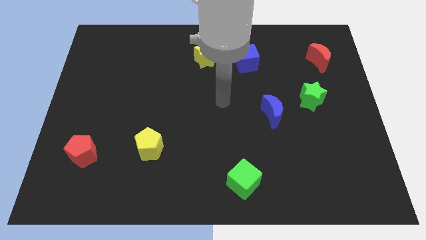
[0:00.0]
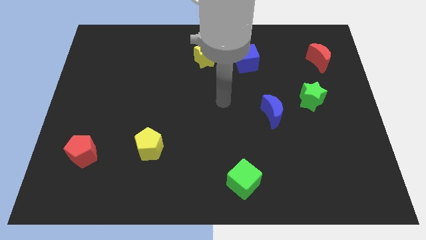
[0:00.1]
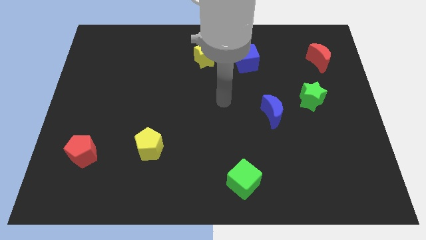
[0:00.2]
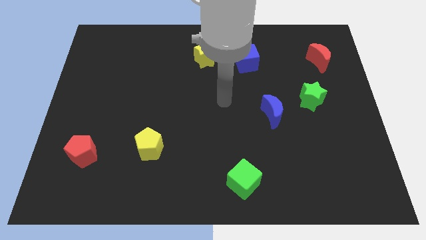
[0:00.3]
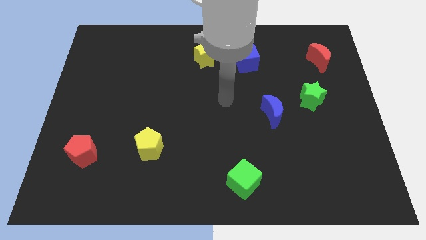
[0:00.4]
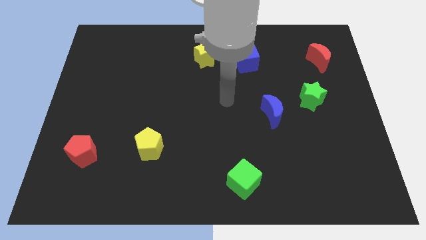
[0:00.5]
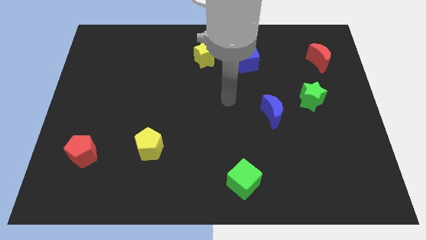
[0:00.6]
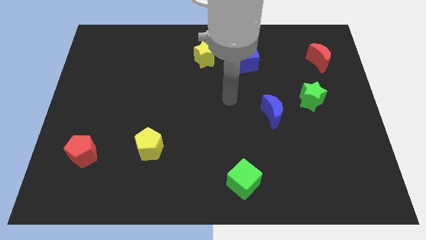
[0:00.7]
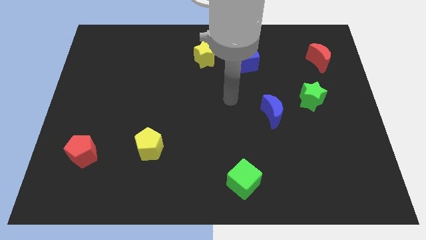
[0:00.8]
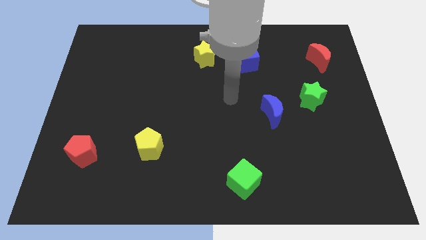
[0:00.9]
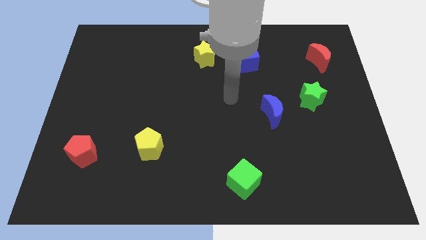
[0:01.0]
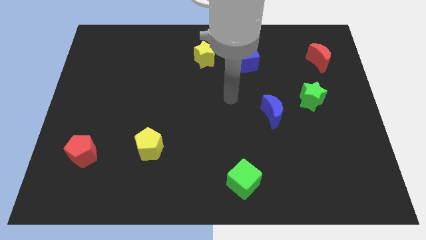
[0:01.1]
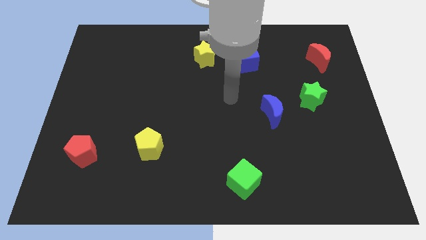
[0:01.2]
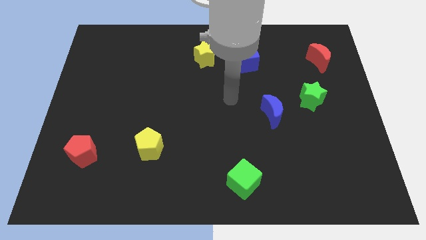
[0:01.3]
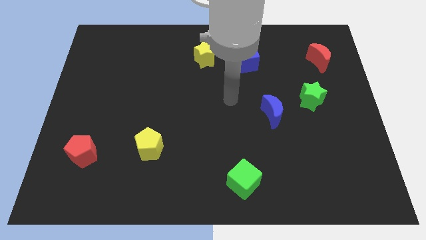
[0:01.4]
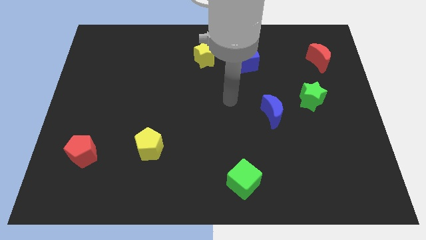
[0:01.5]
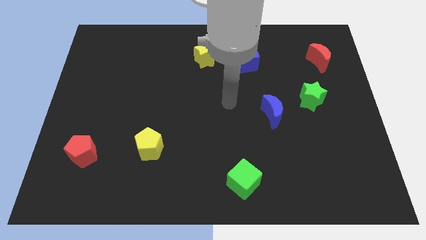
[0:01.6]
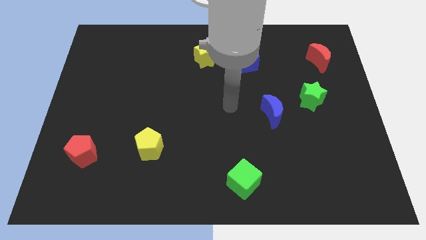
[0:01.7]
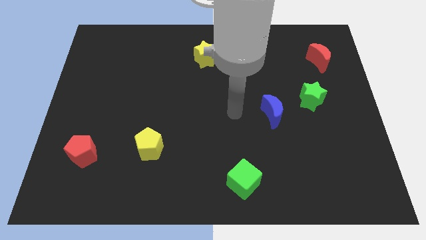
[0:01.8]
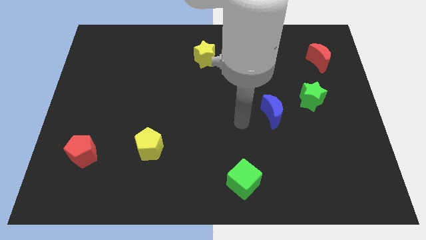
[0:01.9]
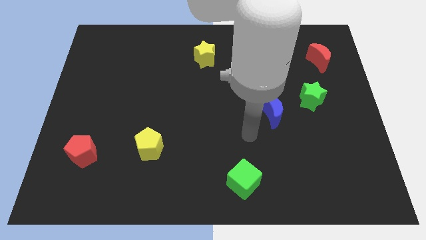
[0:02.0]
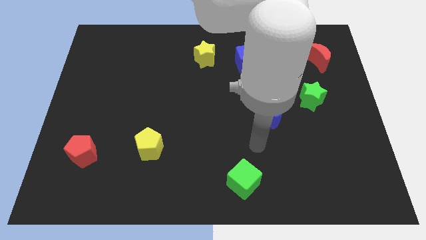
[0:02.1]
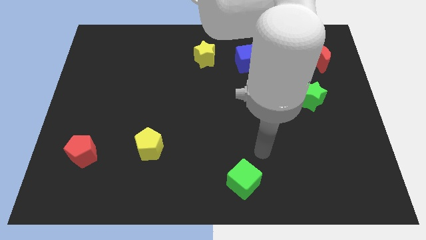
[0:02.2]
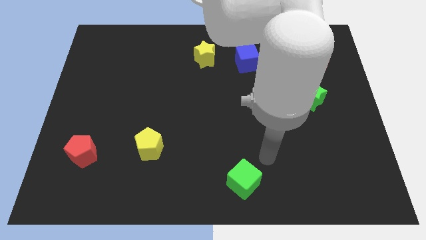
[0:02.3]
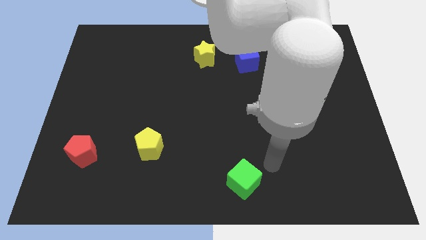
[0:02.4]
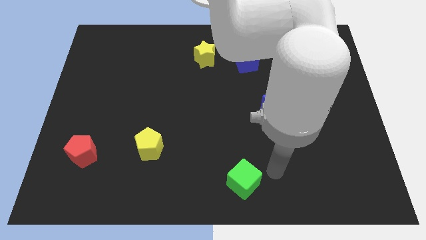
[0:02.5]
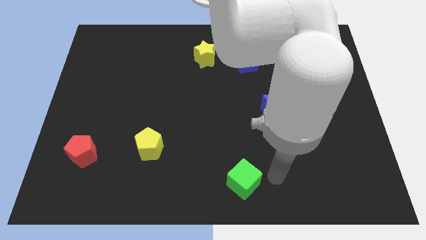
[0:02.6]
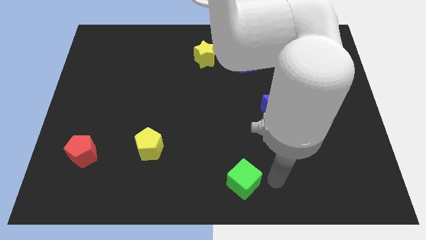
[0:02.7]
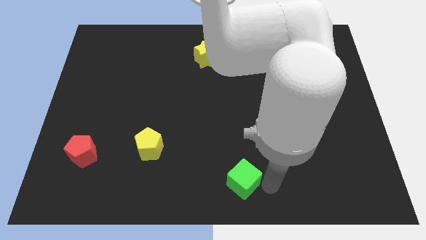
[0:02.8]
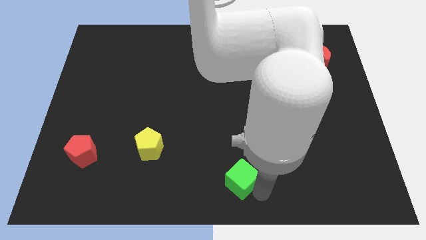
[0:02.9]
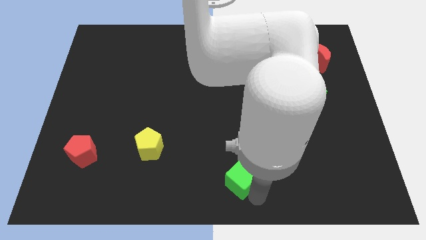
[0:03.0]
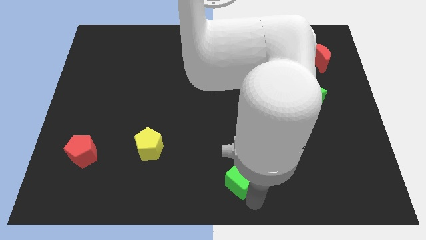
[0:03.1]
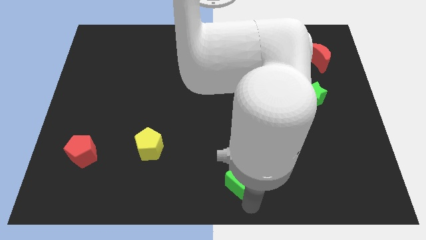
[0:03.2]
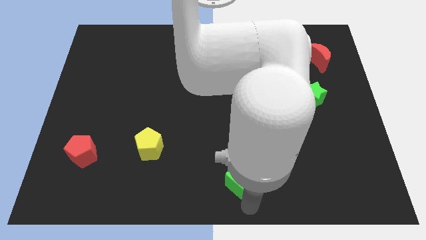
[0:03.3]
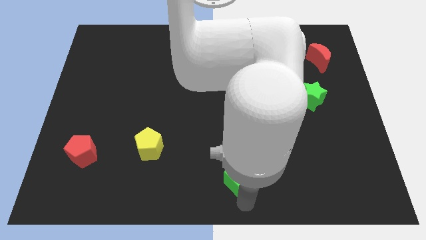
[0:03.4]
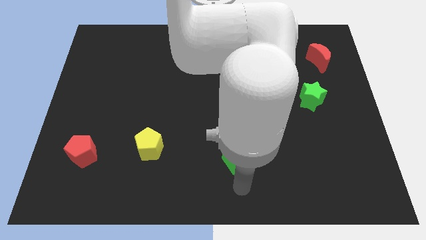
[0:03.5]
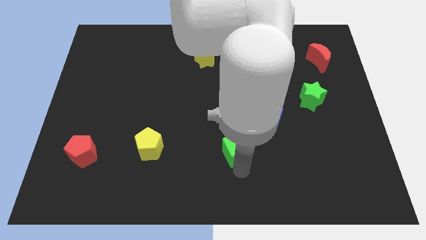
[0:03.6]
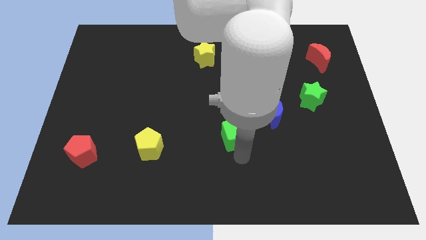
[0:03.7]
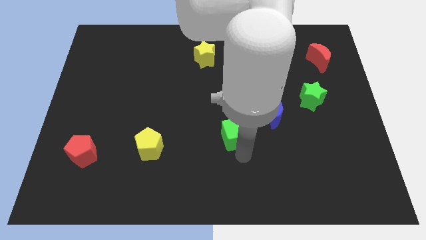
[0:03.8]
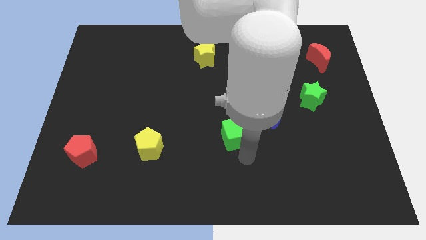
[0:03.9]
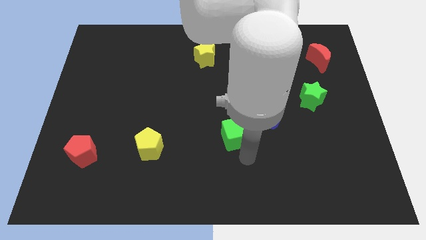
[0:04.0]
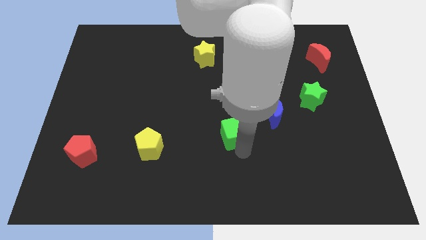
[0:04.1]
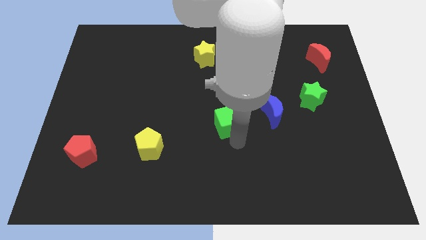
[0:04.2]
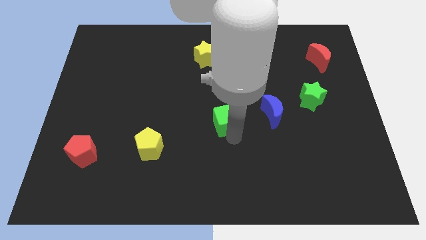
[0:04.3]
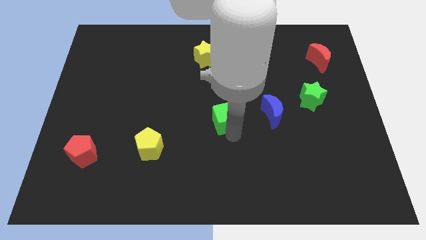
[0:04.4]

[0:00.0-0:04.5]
move green cube adjacent to blue moon

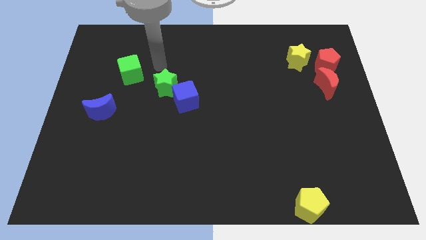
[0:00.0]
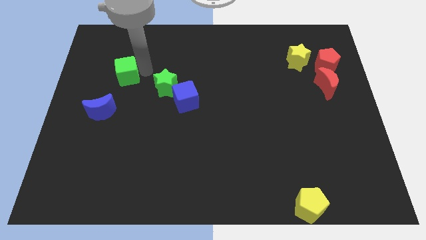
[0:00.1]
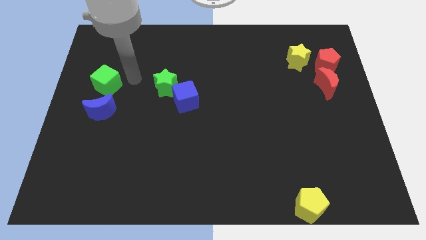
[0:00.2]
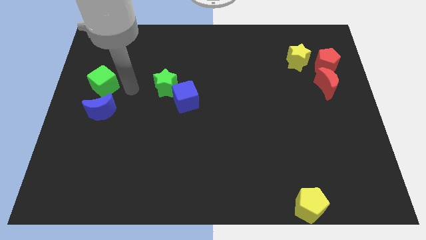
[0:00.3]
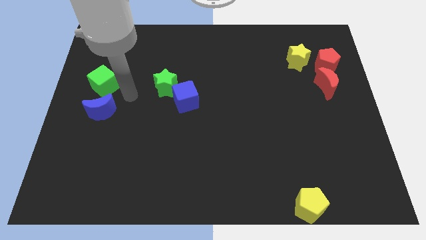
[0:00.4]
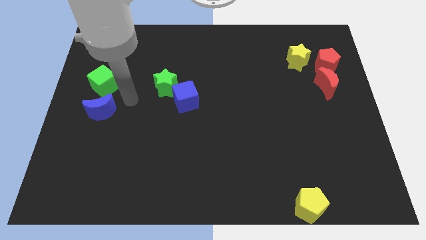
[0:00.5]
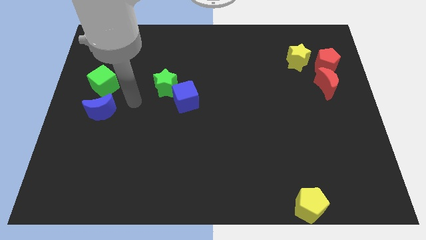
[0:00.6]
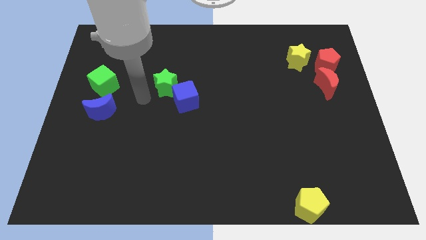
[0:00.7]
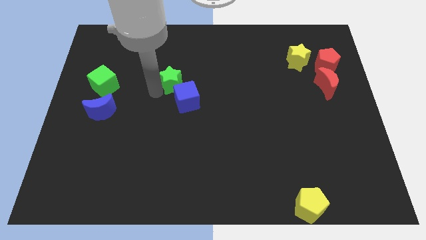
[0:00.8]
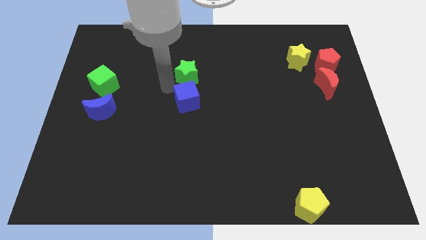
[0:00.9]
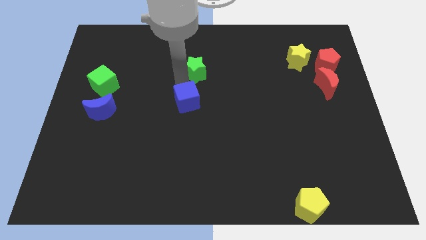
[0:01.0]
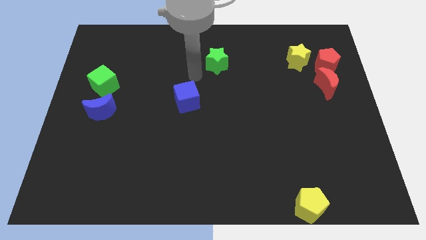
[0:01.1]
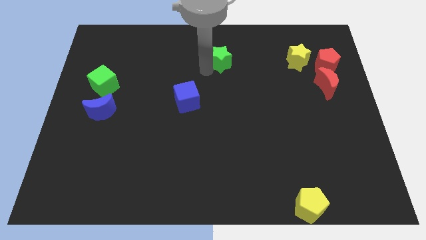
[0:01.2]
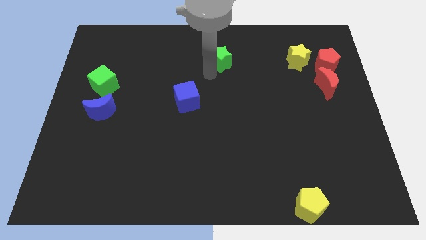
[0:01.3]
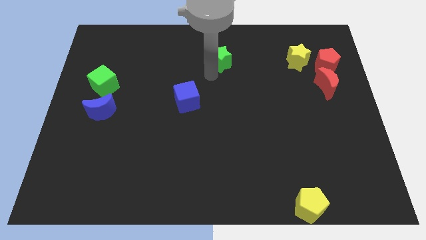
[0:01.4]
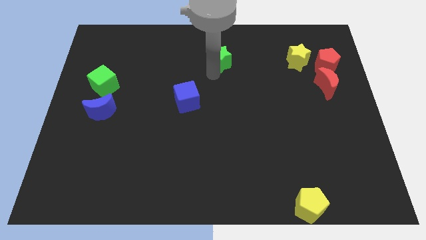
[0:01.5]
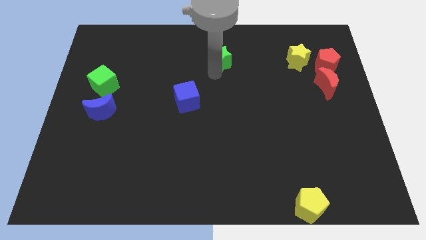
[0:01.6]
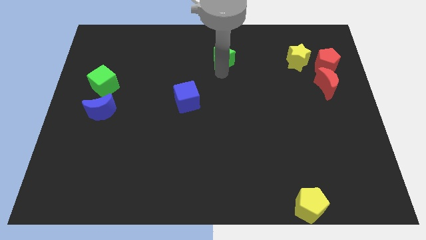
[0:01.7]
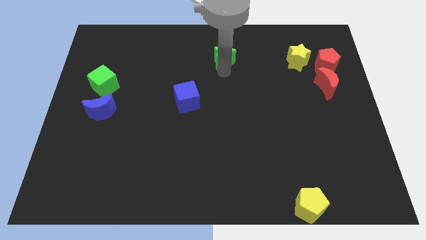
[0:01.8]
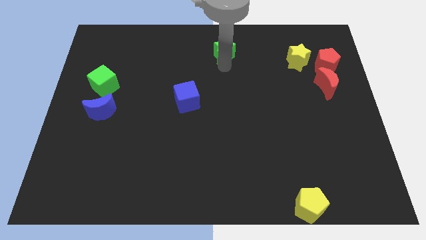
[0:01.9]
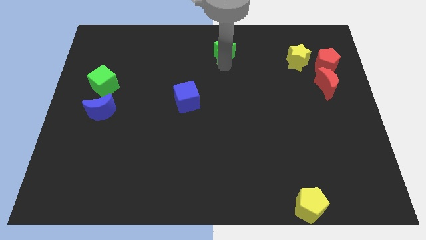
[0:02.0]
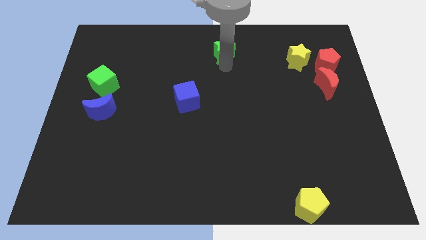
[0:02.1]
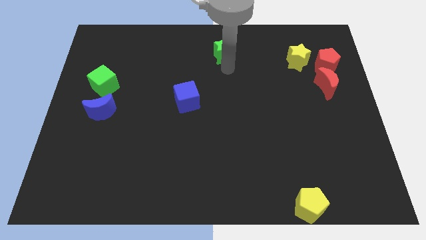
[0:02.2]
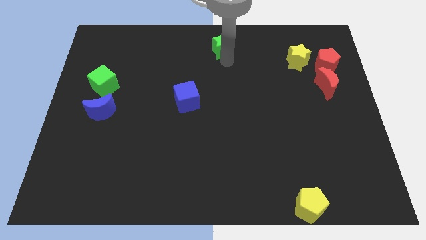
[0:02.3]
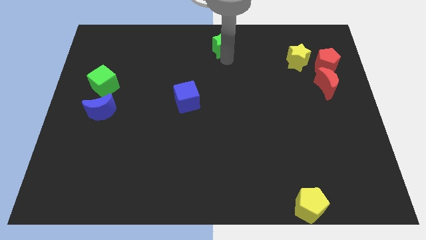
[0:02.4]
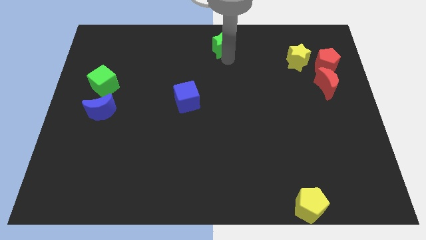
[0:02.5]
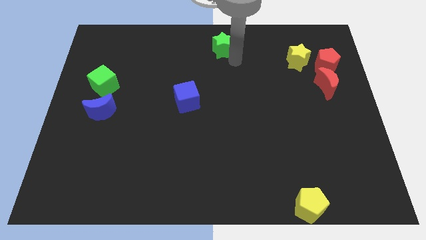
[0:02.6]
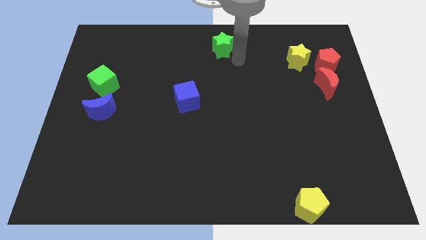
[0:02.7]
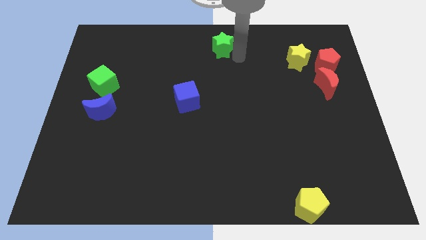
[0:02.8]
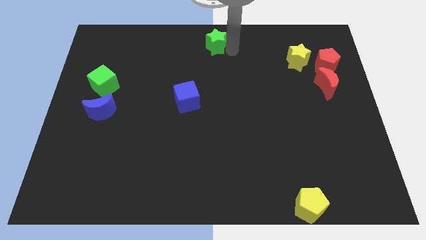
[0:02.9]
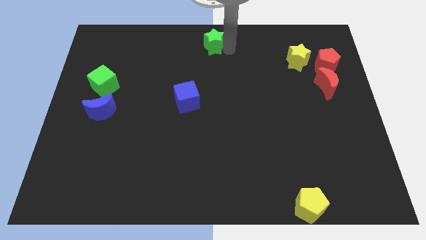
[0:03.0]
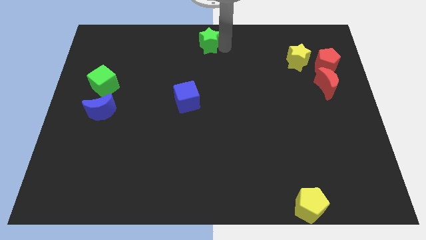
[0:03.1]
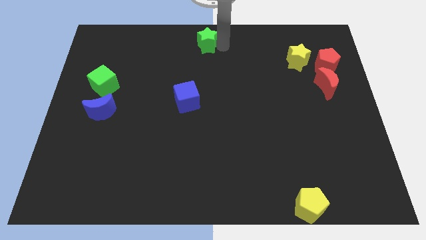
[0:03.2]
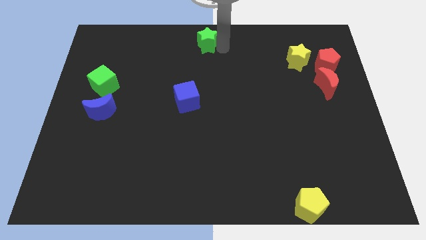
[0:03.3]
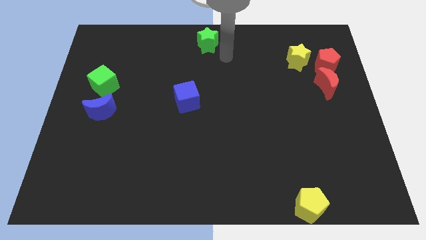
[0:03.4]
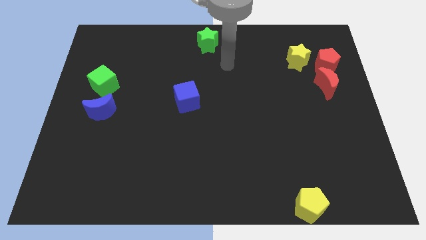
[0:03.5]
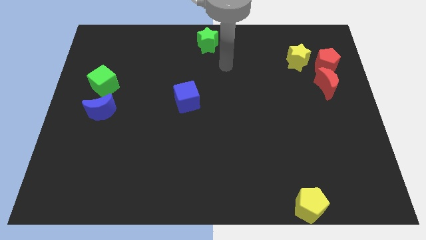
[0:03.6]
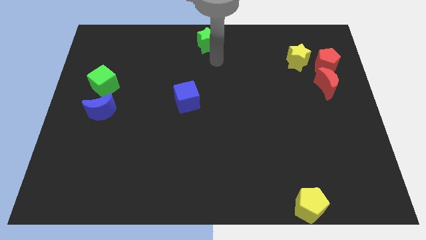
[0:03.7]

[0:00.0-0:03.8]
move green star towards the top center of the board

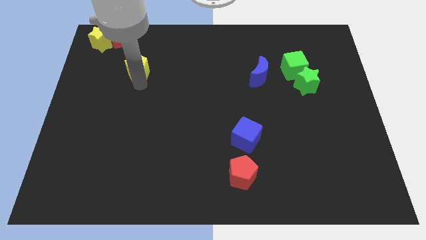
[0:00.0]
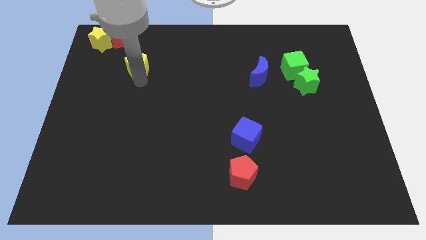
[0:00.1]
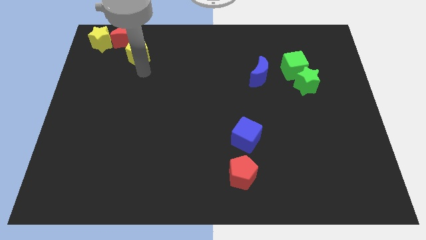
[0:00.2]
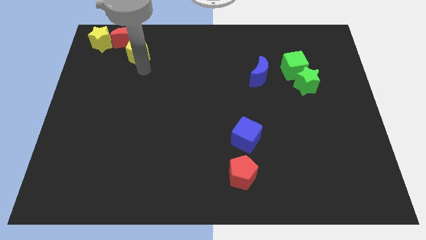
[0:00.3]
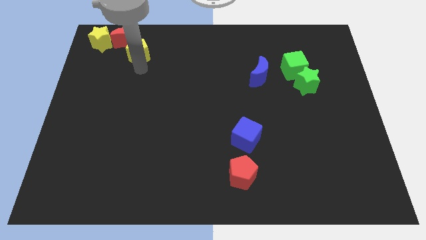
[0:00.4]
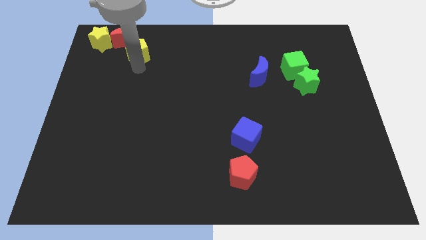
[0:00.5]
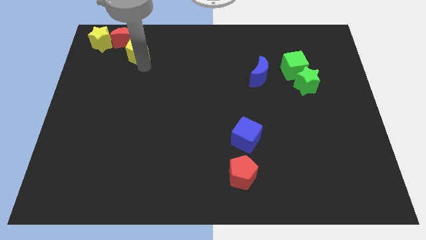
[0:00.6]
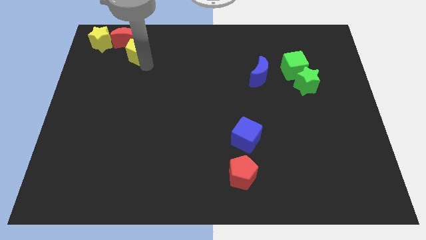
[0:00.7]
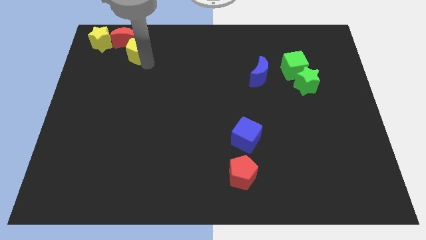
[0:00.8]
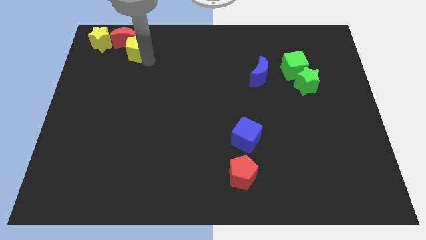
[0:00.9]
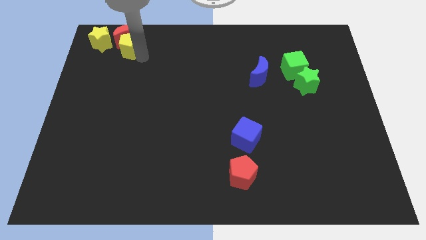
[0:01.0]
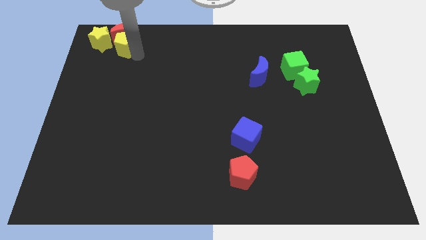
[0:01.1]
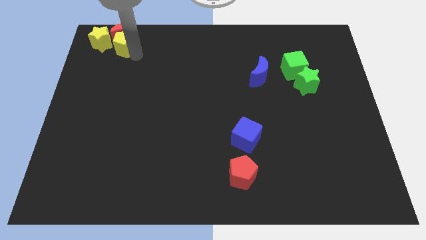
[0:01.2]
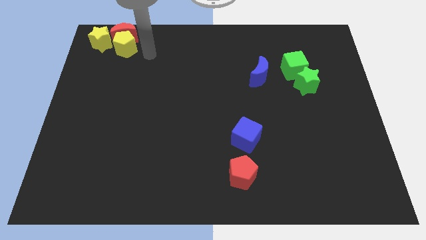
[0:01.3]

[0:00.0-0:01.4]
place yellow pentagon to the bottom of red moon
